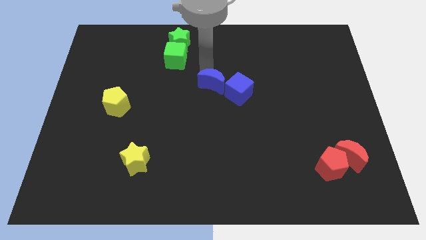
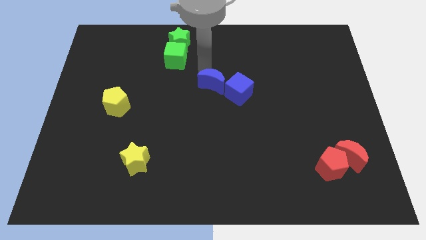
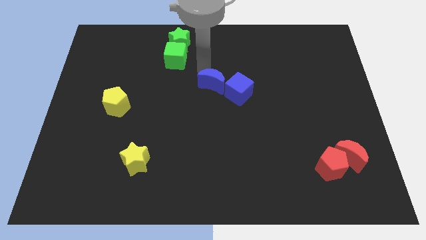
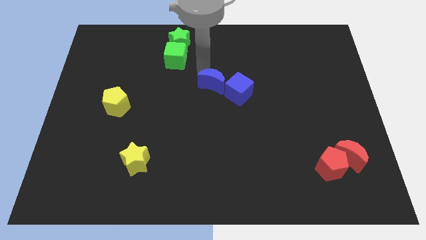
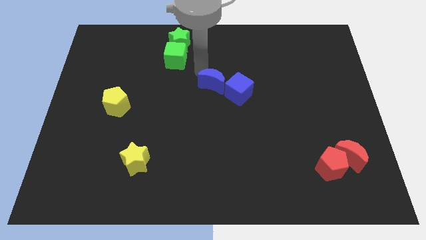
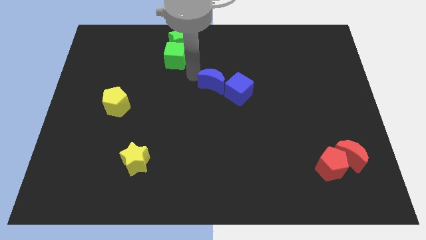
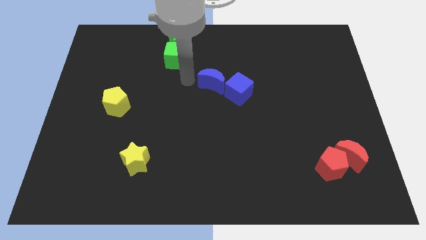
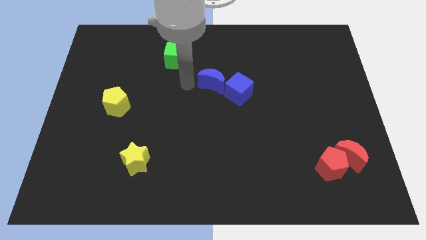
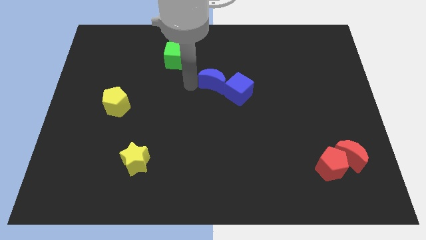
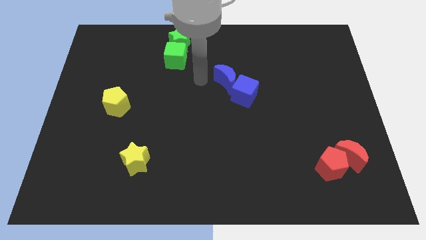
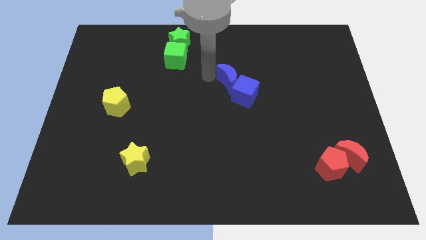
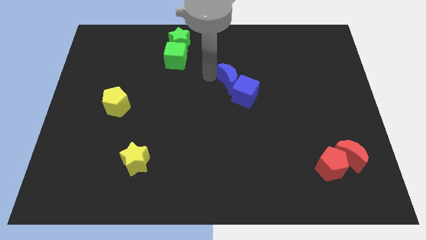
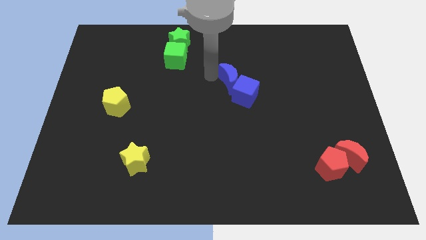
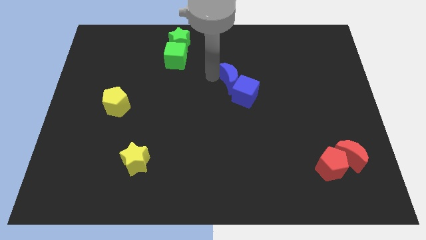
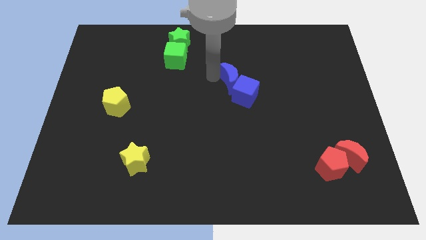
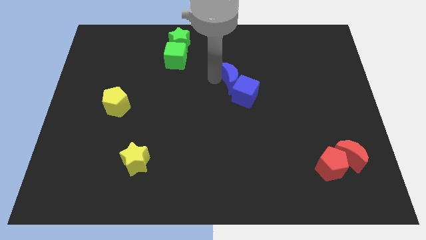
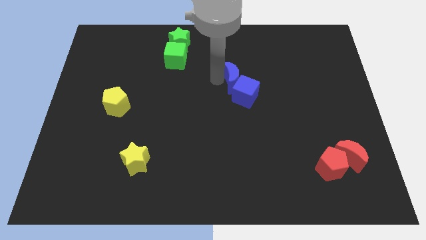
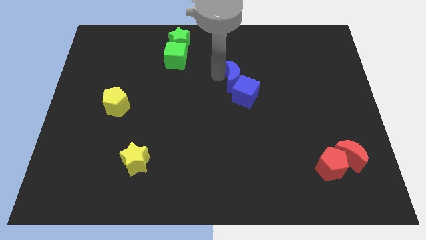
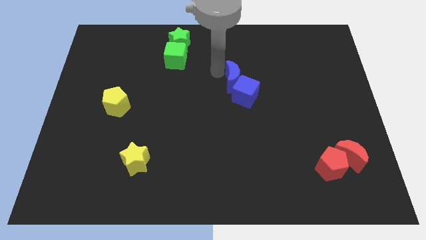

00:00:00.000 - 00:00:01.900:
move blue crescent towards right side

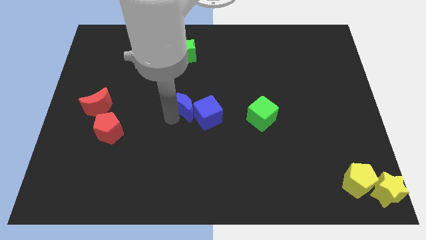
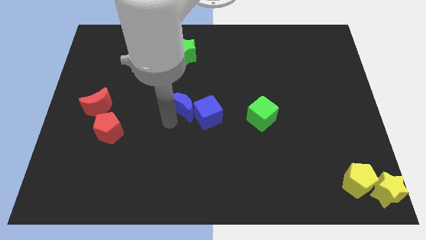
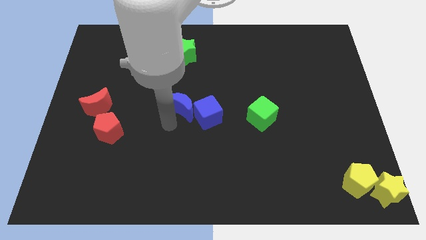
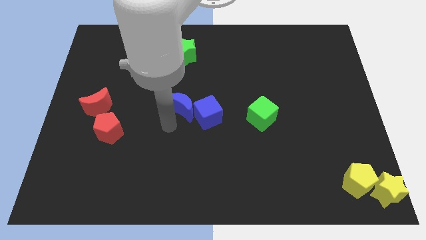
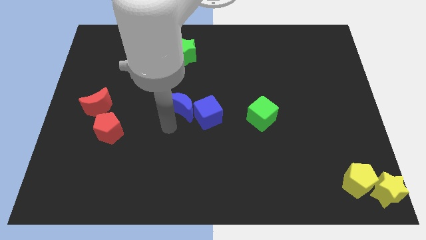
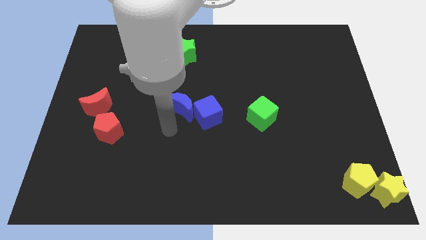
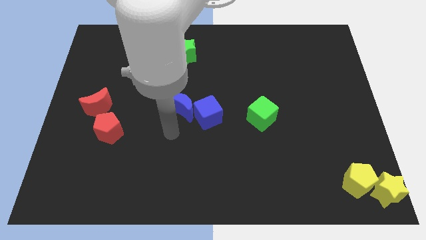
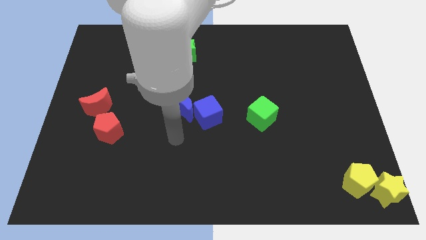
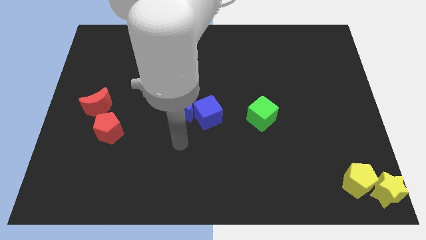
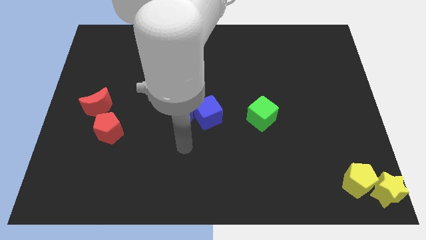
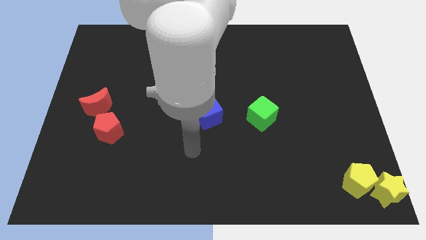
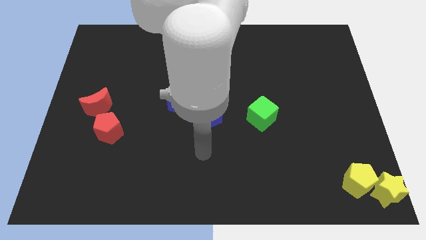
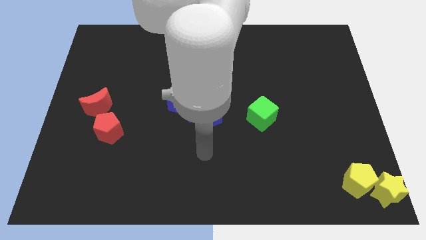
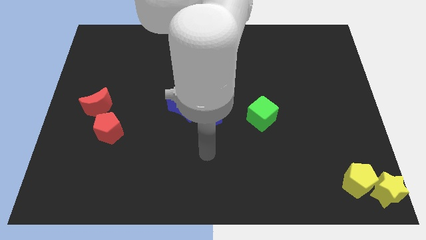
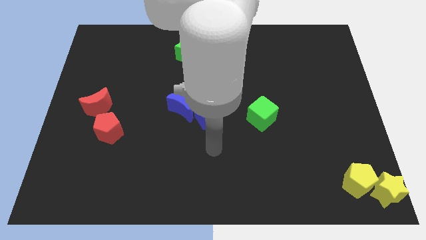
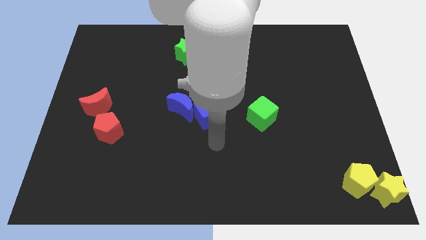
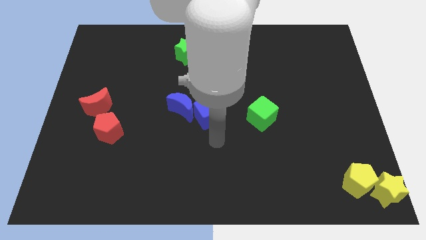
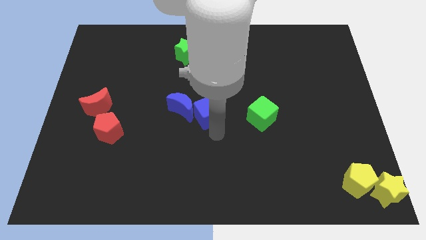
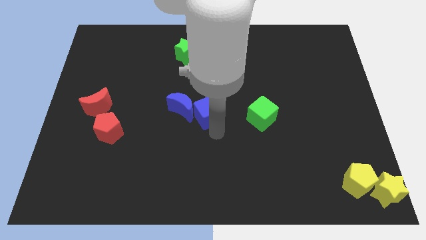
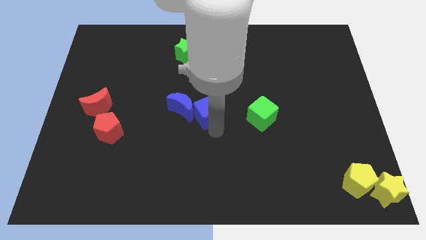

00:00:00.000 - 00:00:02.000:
move your arm away from the blue moon

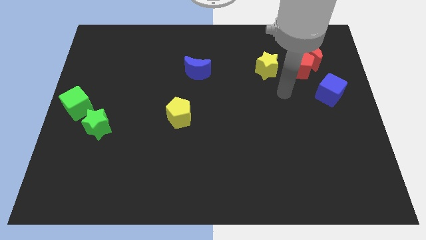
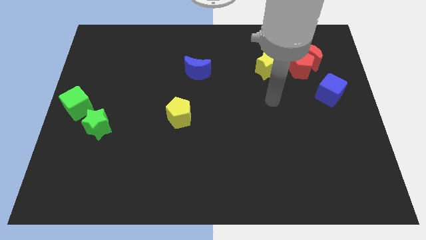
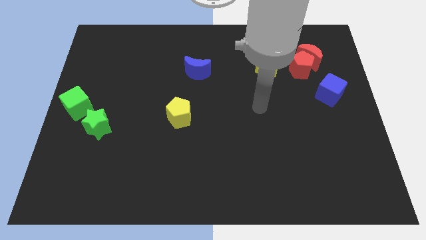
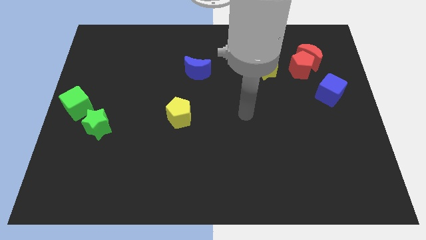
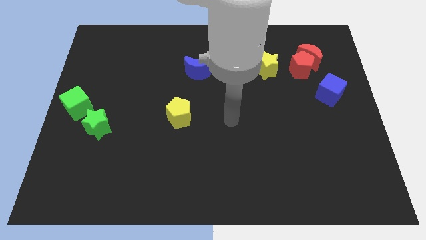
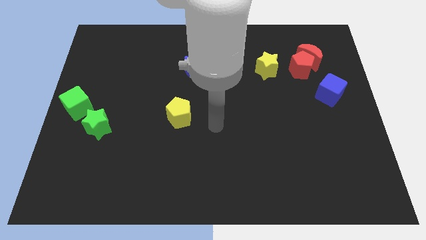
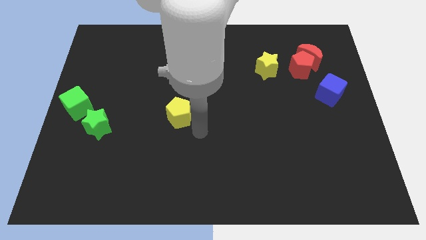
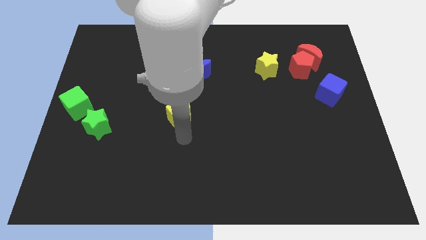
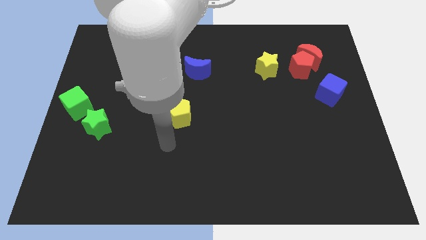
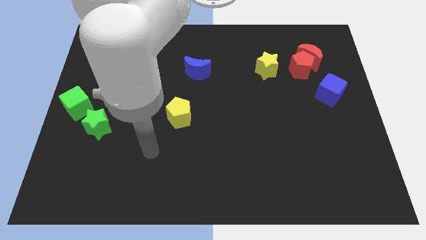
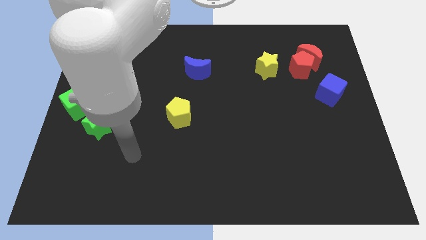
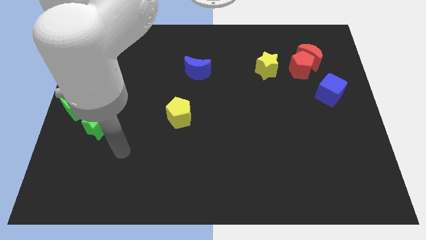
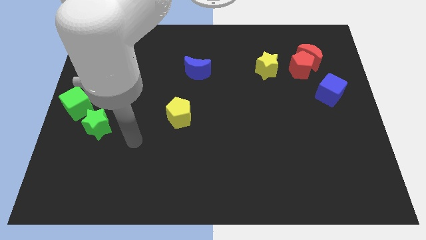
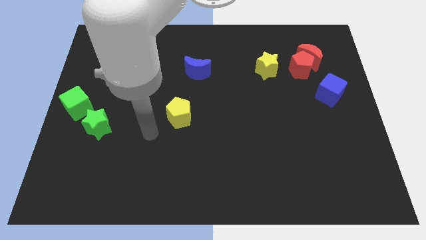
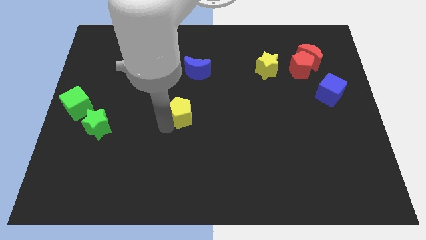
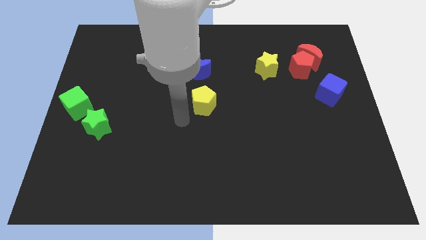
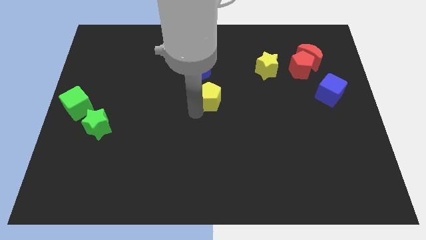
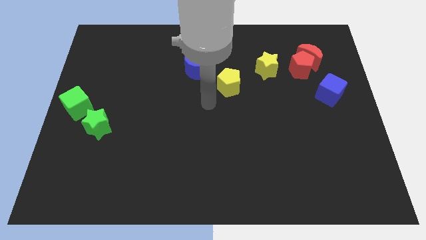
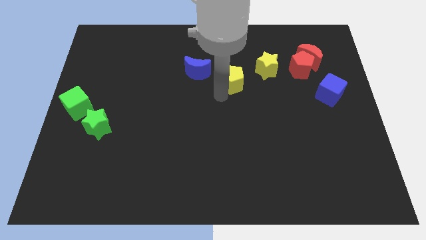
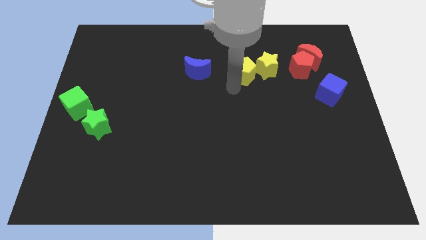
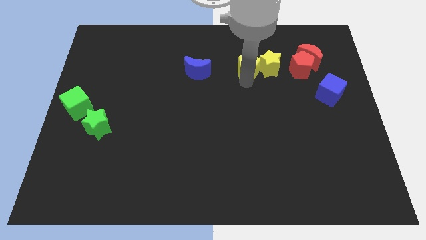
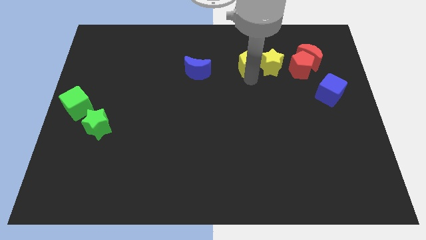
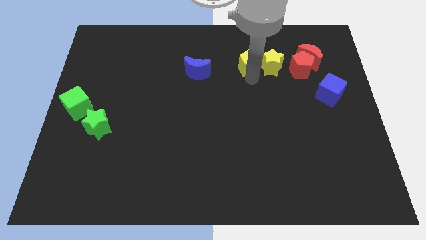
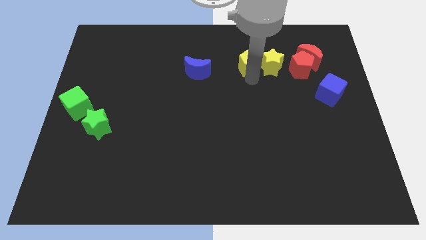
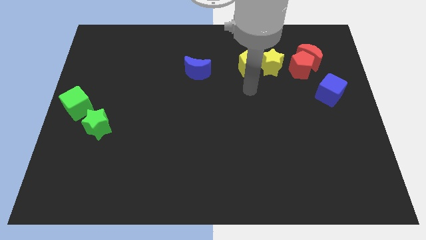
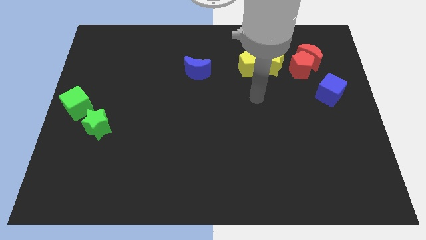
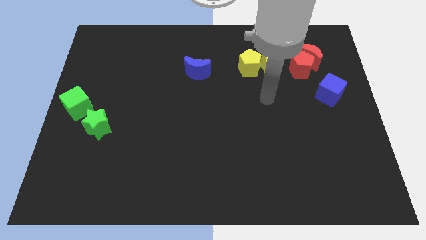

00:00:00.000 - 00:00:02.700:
place yellow pentagon to the left of the yellow star

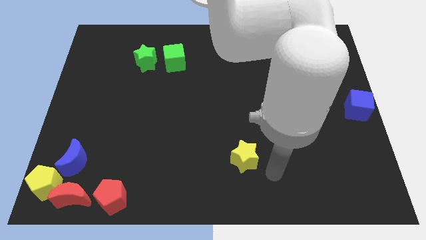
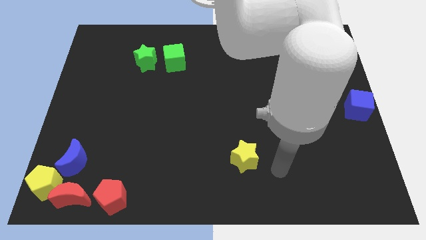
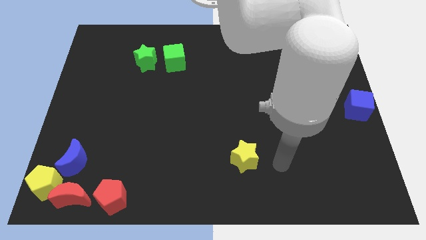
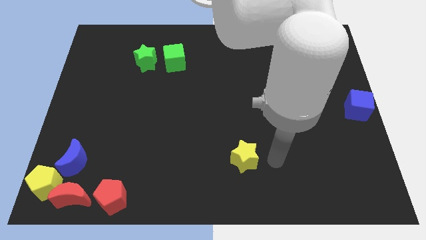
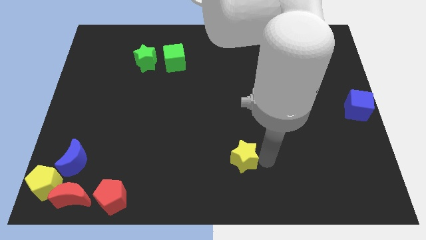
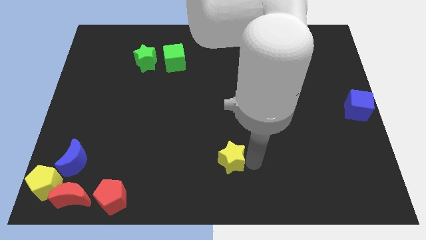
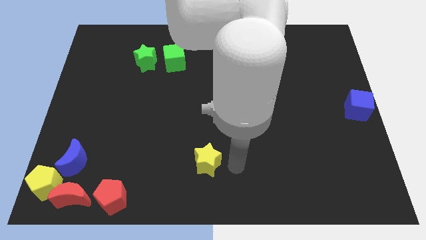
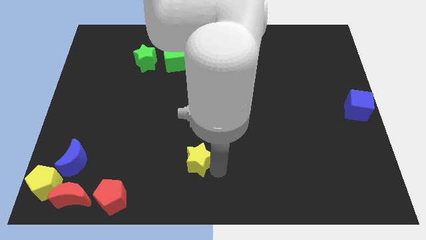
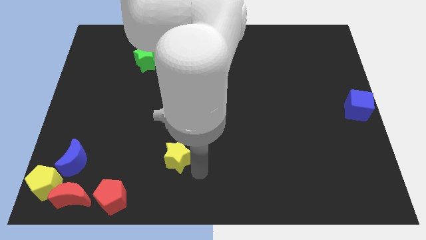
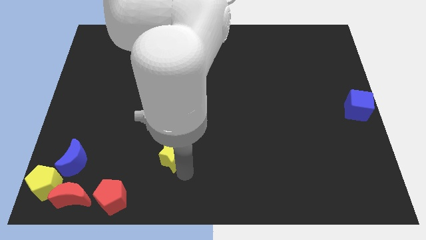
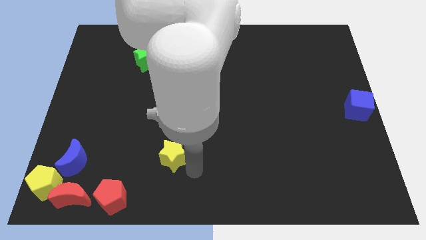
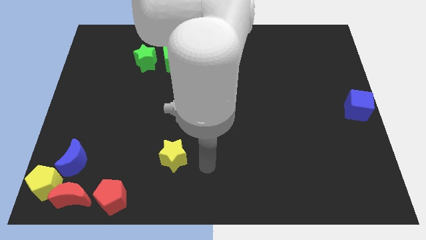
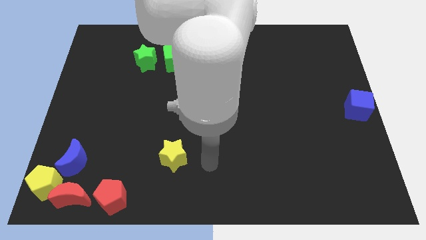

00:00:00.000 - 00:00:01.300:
slide the yellow star slightly to the left

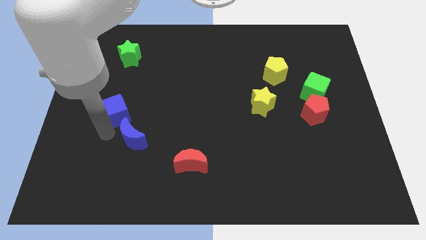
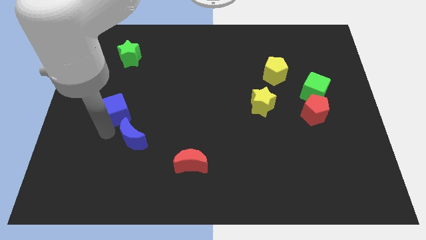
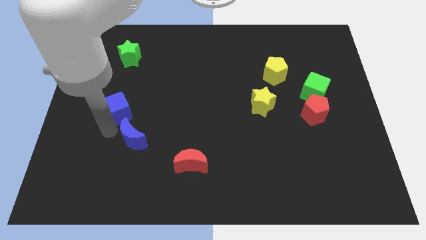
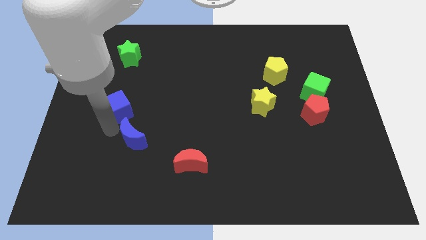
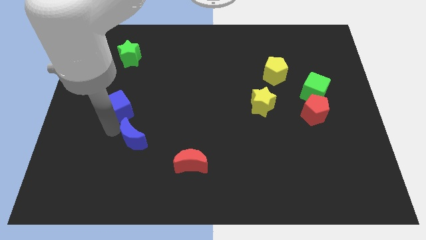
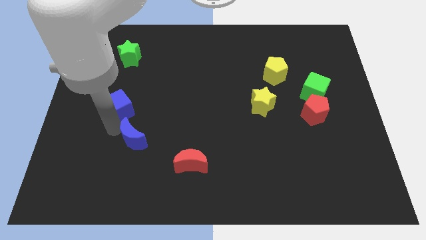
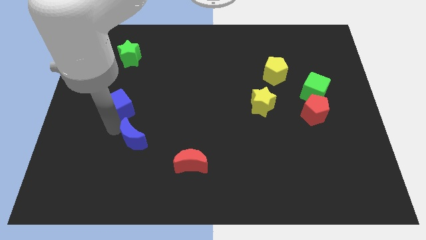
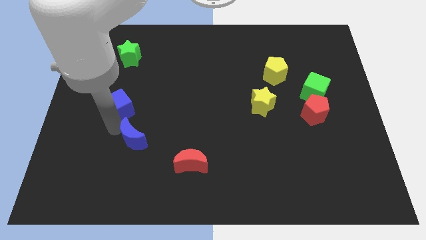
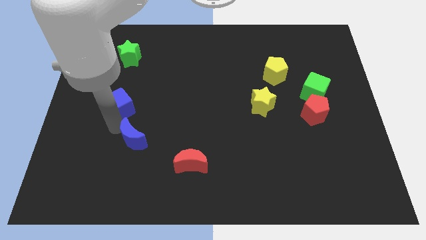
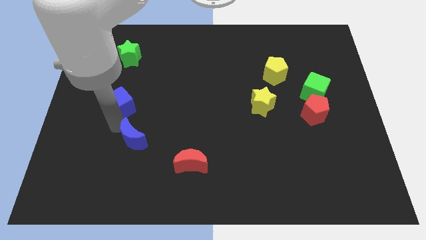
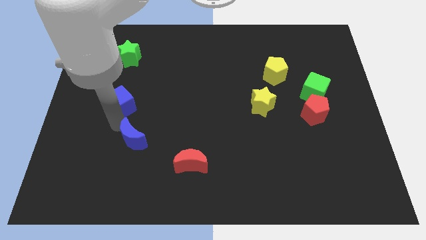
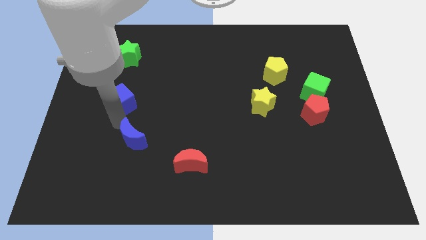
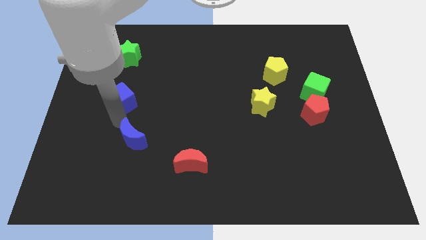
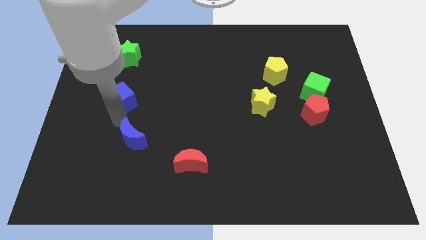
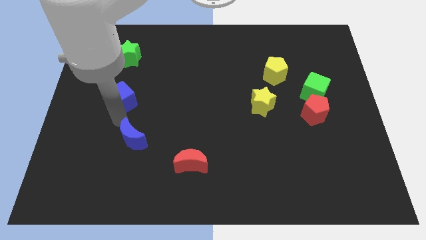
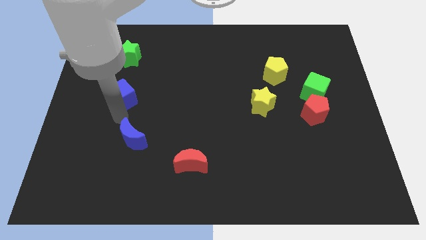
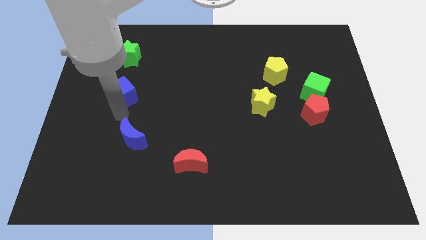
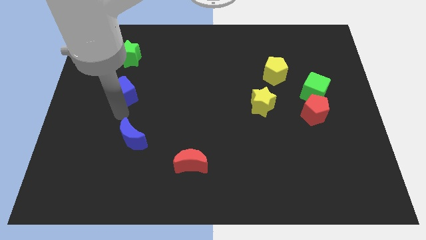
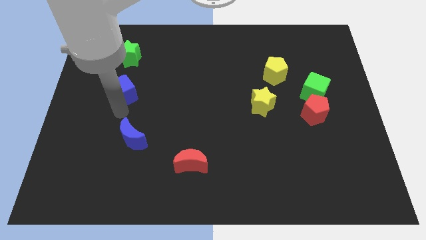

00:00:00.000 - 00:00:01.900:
separate blue cube from the blue moon
